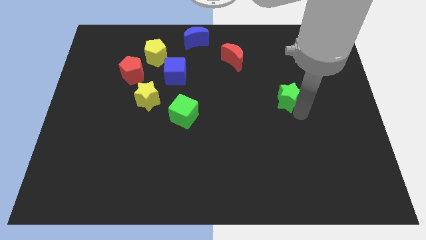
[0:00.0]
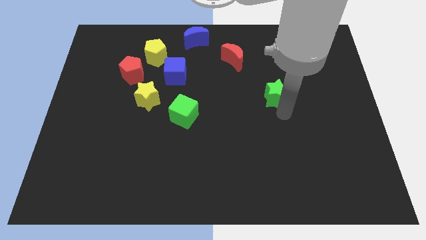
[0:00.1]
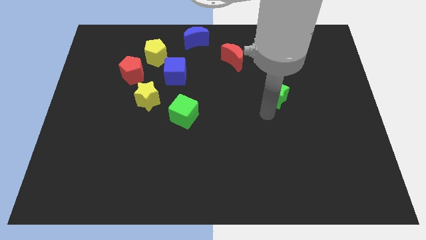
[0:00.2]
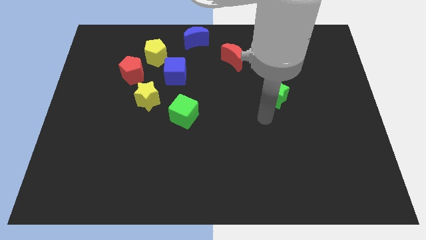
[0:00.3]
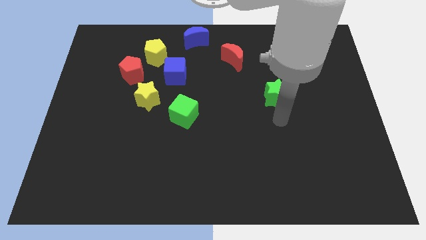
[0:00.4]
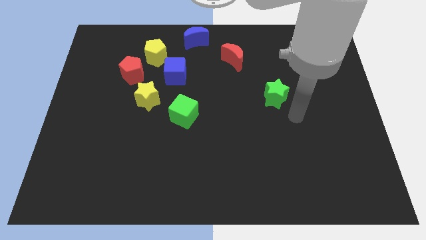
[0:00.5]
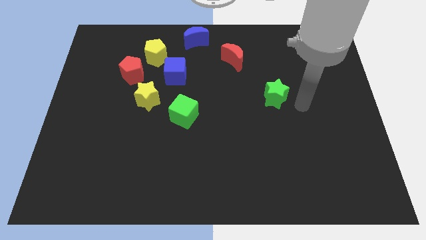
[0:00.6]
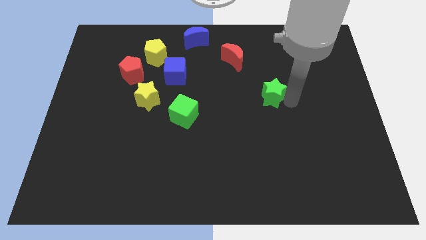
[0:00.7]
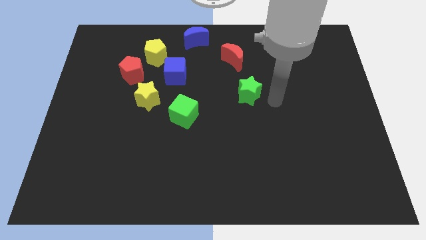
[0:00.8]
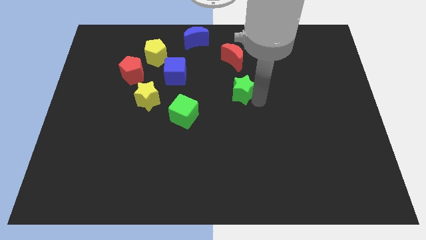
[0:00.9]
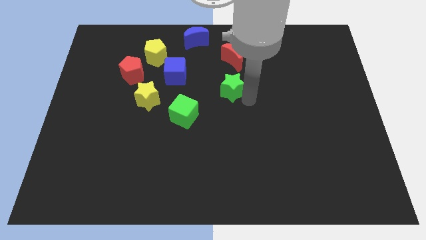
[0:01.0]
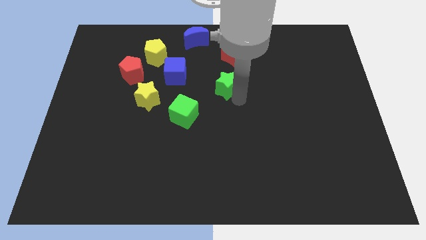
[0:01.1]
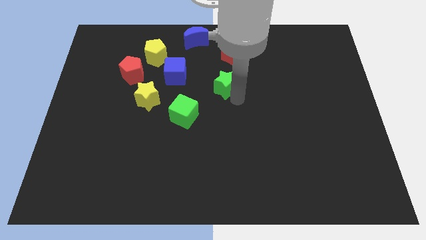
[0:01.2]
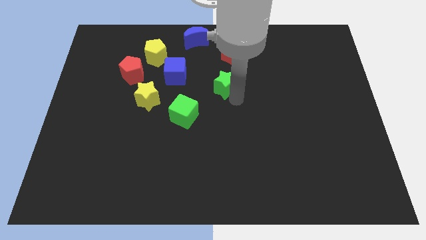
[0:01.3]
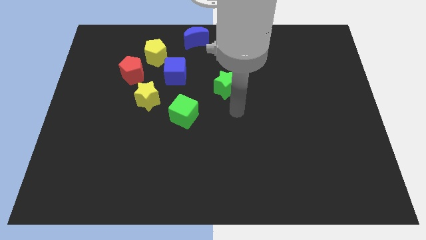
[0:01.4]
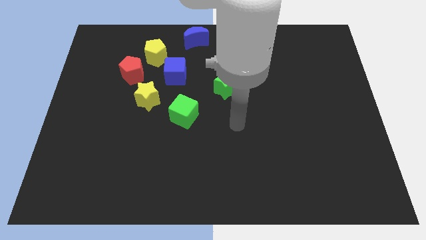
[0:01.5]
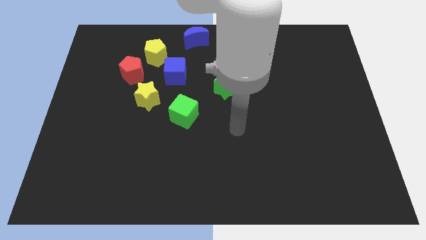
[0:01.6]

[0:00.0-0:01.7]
place the green star below the red moon

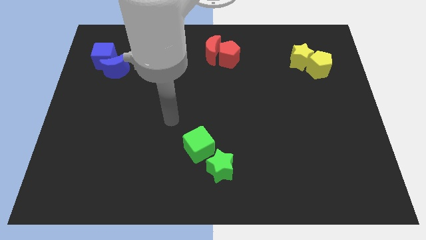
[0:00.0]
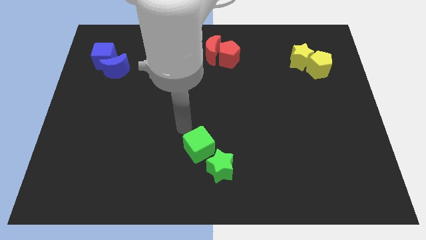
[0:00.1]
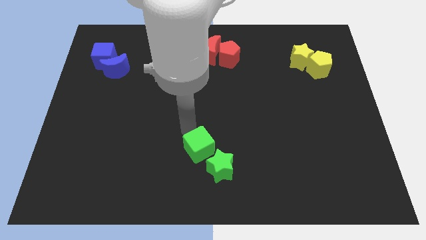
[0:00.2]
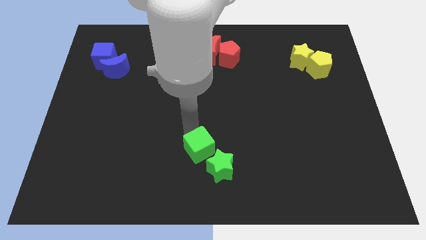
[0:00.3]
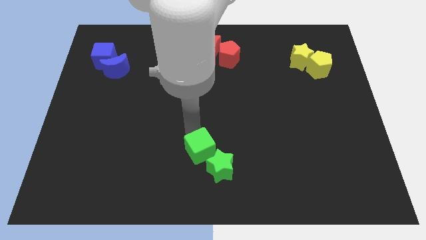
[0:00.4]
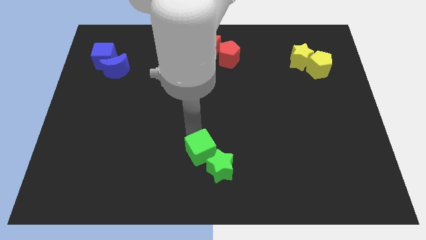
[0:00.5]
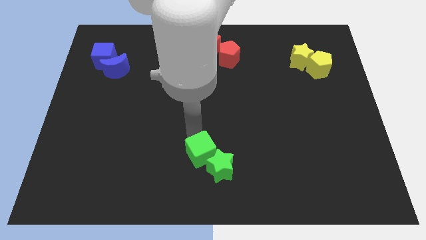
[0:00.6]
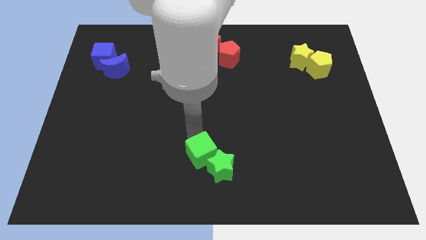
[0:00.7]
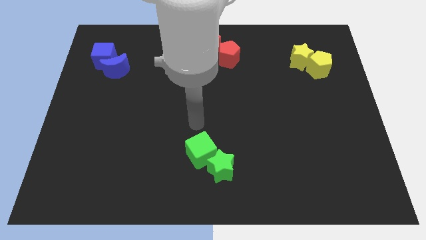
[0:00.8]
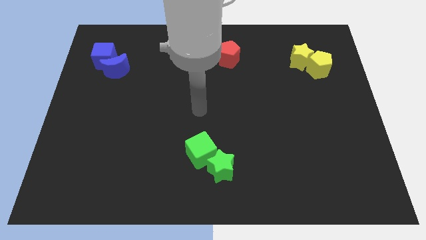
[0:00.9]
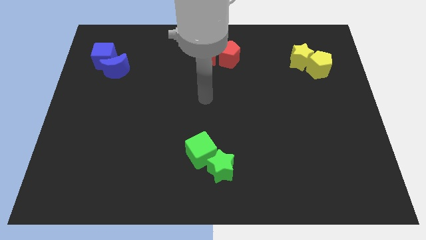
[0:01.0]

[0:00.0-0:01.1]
push the green cube into green star

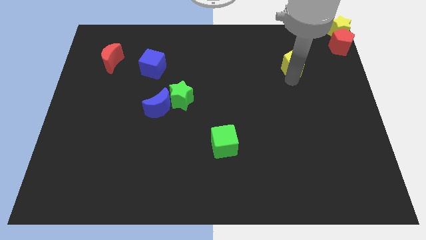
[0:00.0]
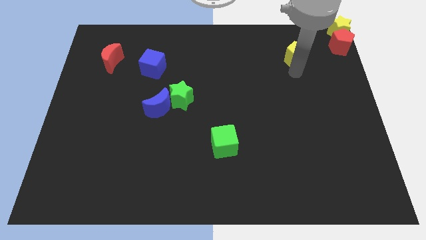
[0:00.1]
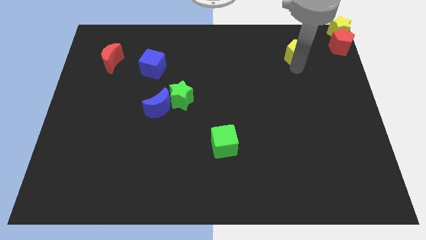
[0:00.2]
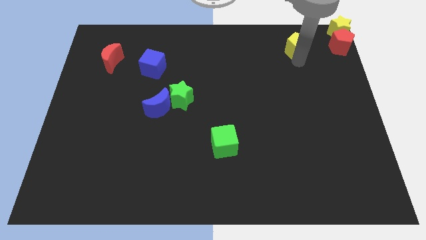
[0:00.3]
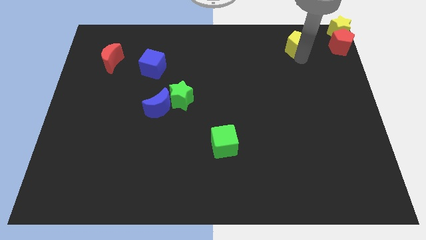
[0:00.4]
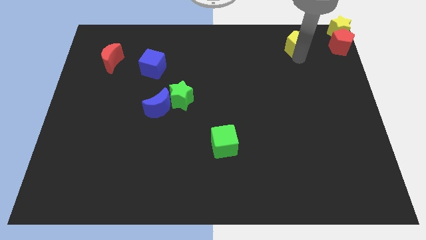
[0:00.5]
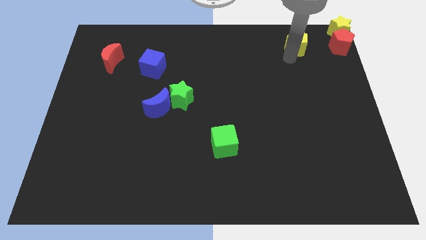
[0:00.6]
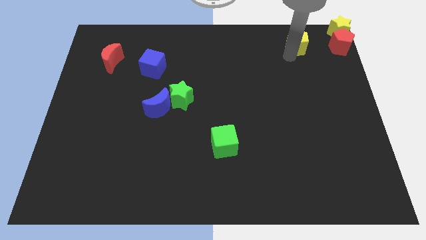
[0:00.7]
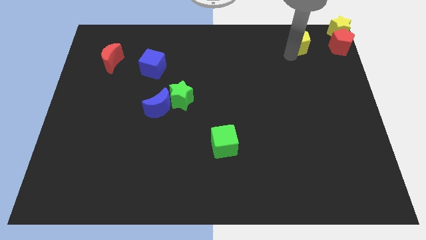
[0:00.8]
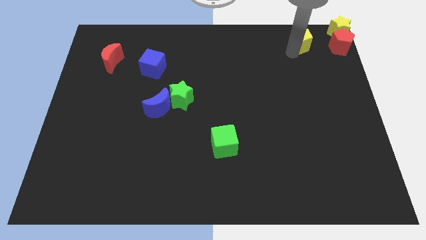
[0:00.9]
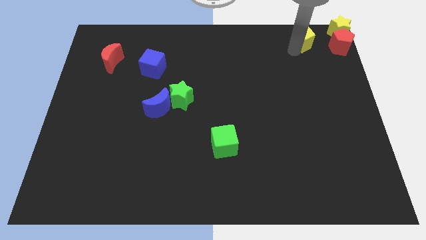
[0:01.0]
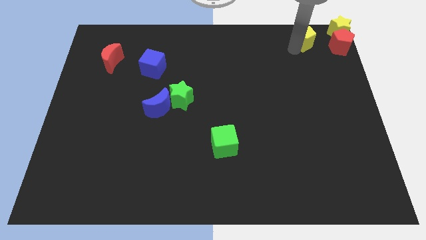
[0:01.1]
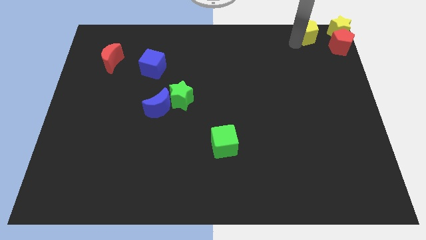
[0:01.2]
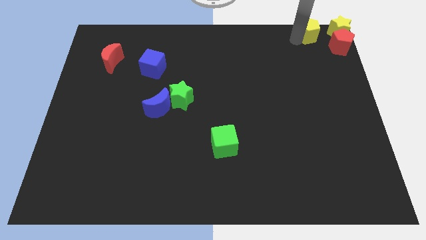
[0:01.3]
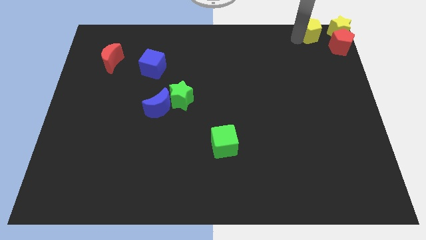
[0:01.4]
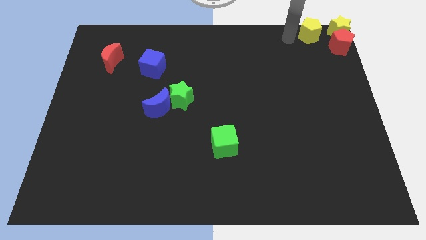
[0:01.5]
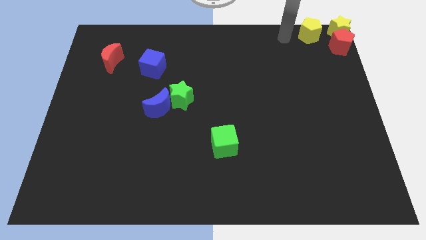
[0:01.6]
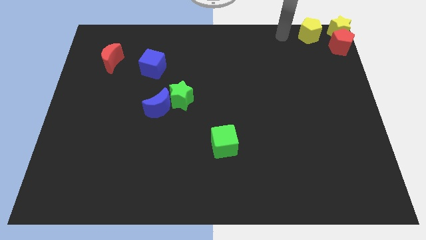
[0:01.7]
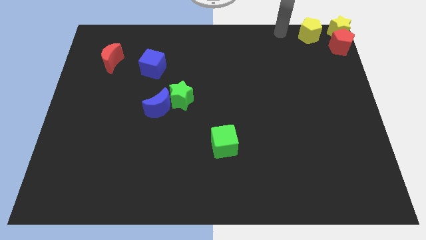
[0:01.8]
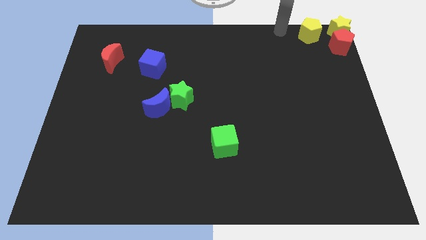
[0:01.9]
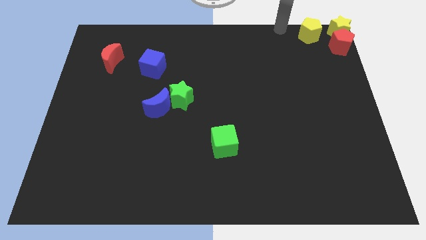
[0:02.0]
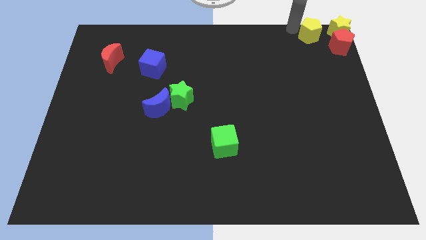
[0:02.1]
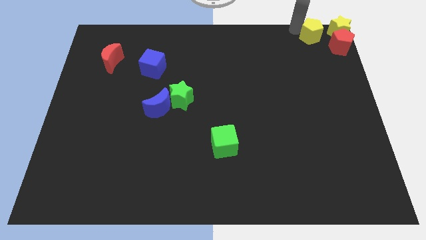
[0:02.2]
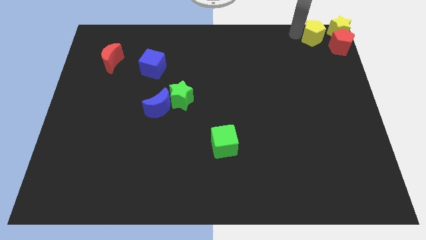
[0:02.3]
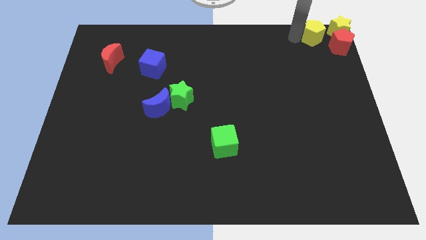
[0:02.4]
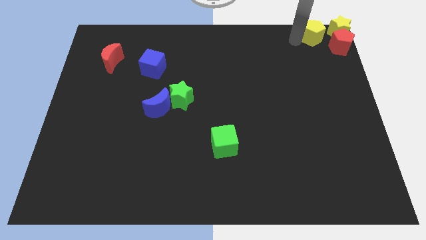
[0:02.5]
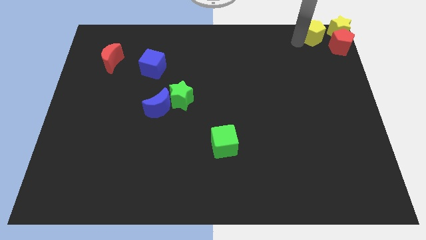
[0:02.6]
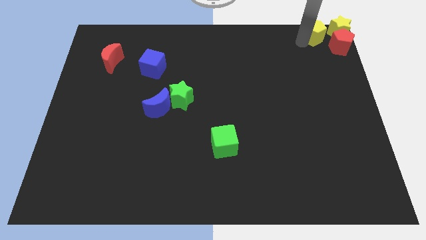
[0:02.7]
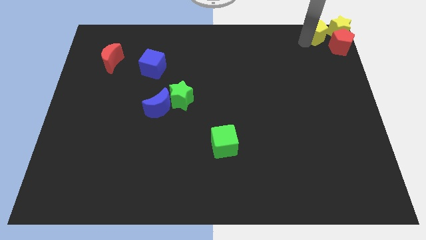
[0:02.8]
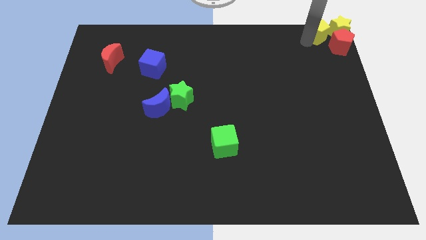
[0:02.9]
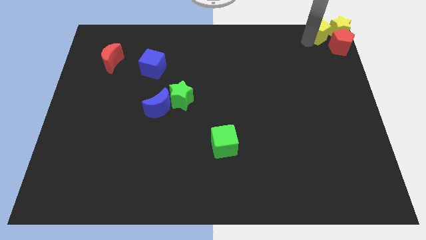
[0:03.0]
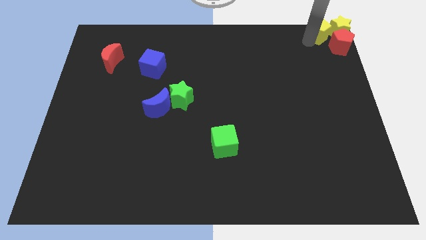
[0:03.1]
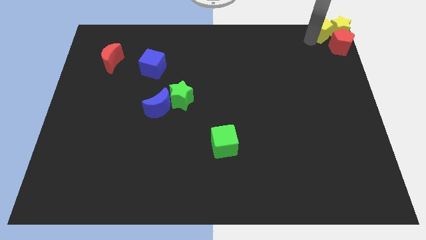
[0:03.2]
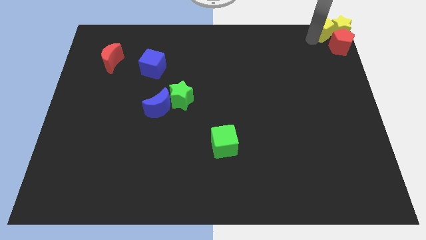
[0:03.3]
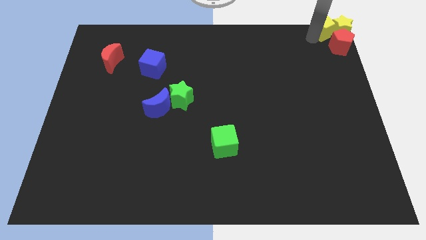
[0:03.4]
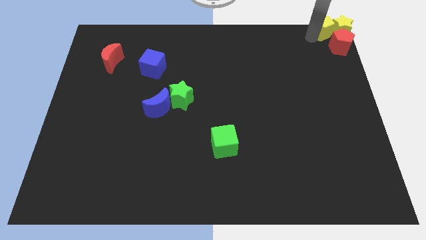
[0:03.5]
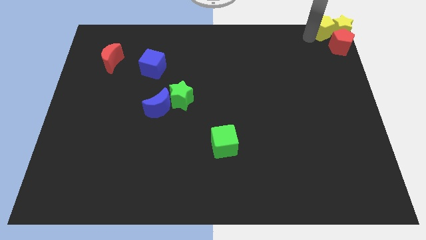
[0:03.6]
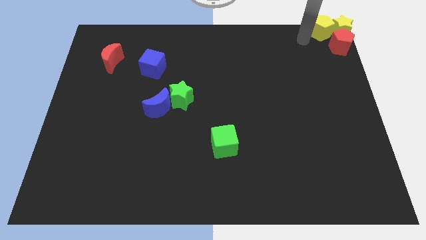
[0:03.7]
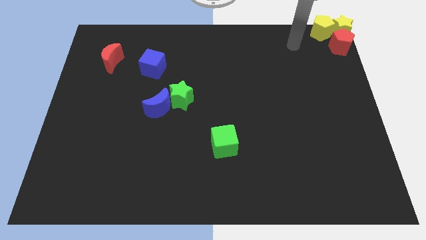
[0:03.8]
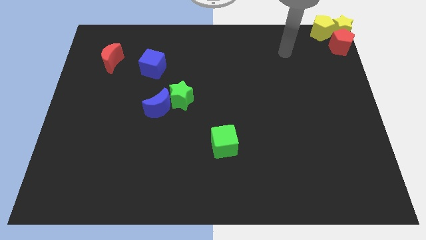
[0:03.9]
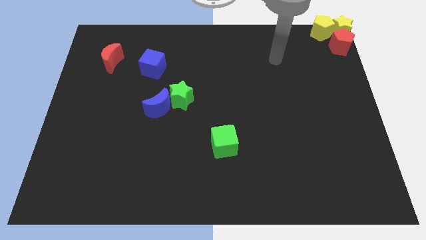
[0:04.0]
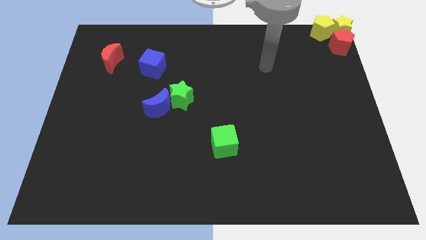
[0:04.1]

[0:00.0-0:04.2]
move yellow pentagon close to yellow star

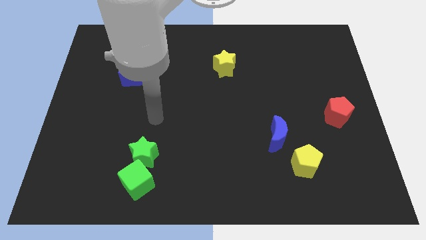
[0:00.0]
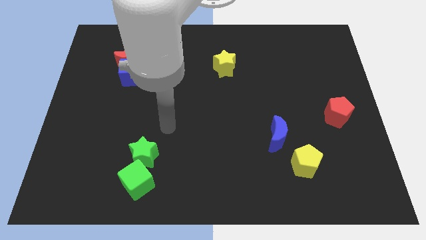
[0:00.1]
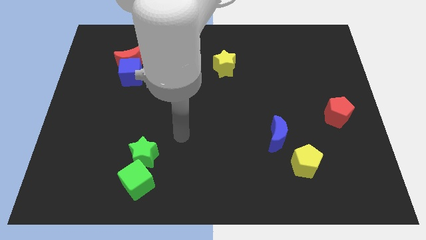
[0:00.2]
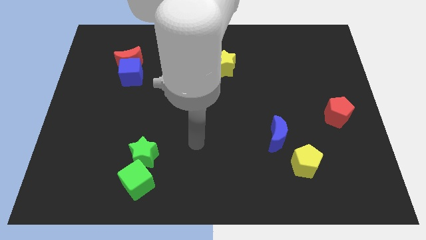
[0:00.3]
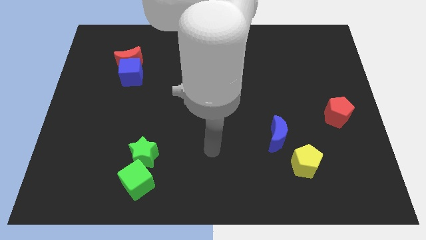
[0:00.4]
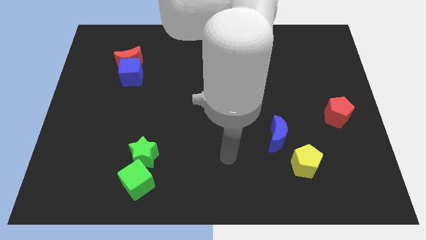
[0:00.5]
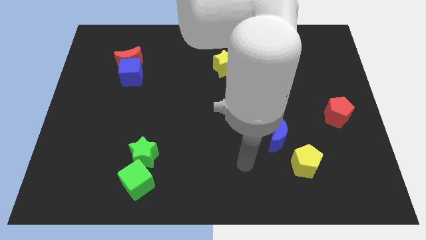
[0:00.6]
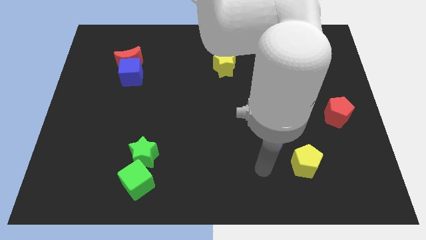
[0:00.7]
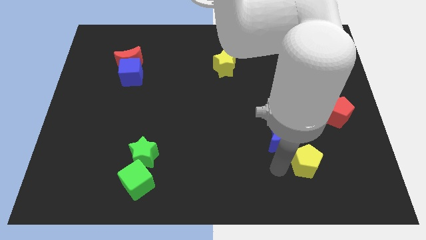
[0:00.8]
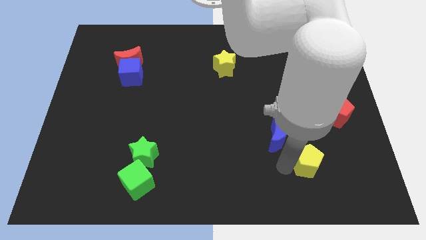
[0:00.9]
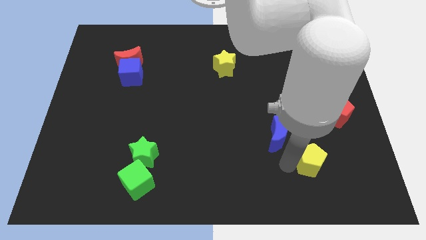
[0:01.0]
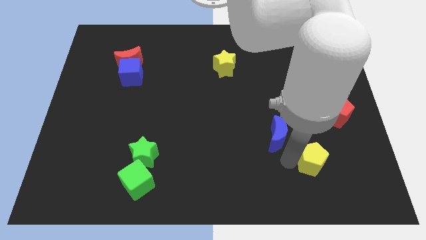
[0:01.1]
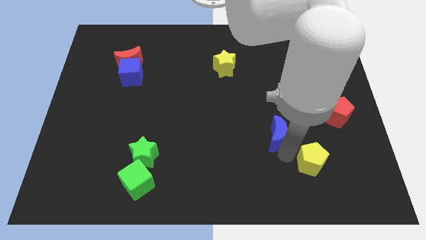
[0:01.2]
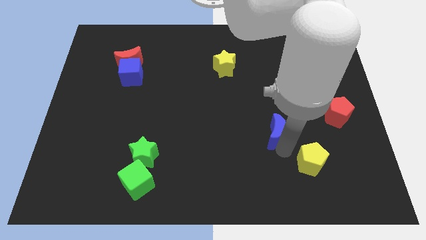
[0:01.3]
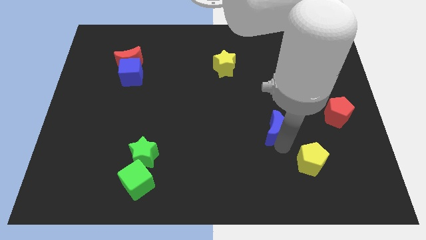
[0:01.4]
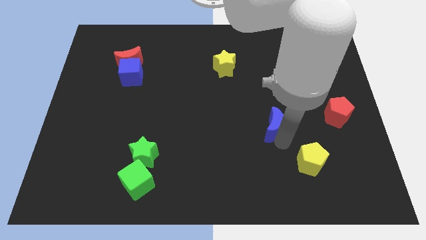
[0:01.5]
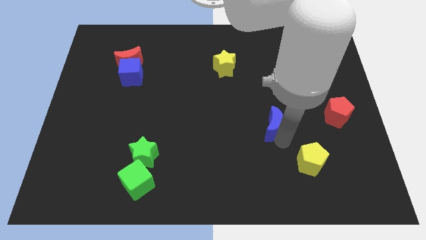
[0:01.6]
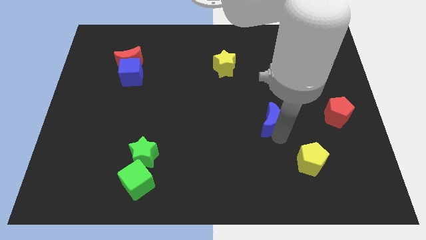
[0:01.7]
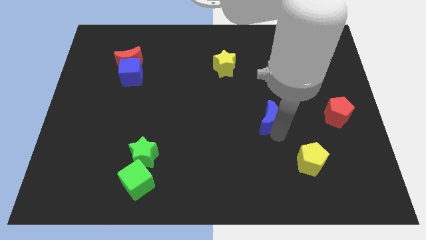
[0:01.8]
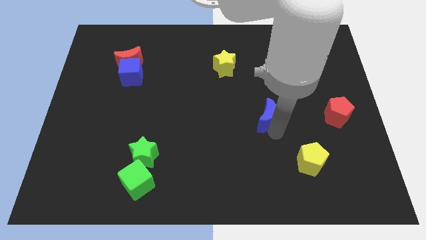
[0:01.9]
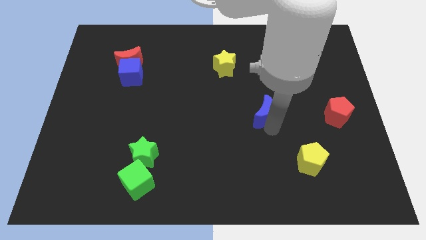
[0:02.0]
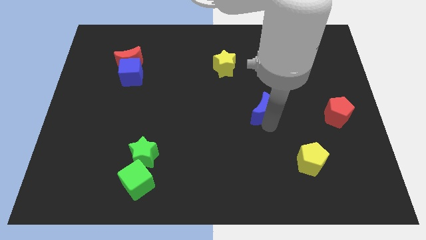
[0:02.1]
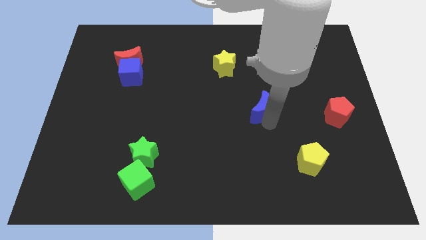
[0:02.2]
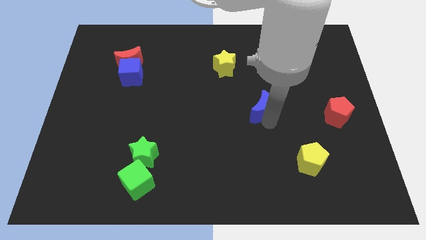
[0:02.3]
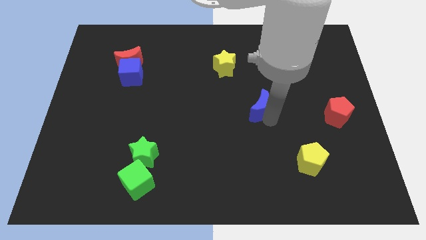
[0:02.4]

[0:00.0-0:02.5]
place the blue moon left to the red pentagon
